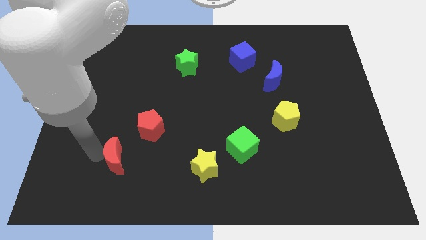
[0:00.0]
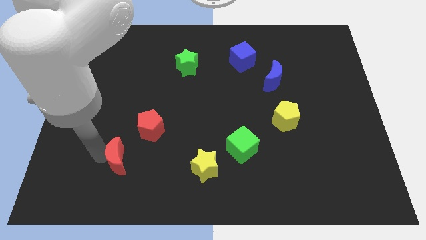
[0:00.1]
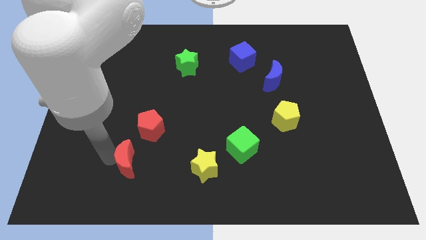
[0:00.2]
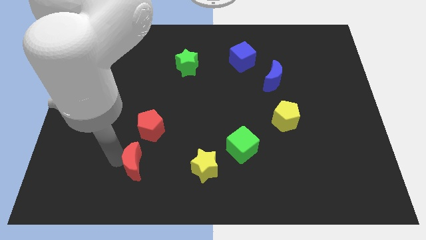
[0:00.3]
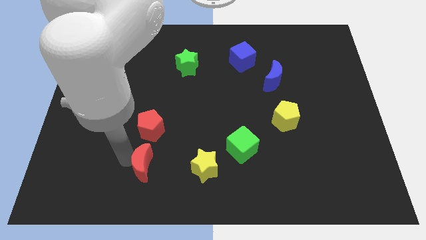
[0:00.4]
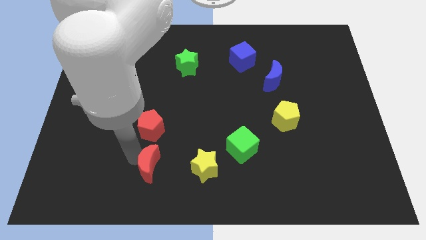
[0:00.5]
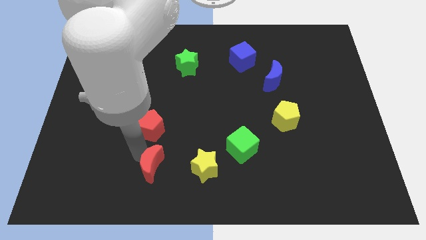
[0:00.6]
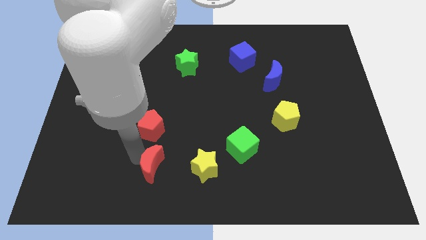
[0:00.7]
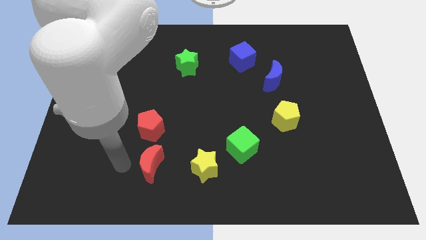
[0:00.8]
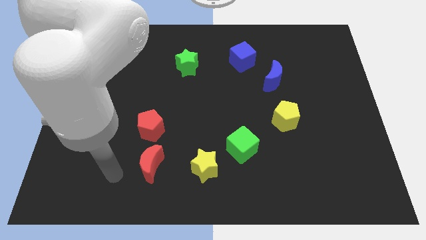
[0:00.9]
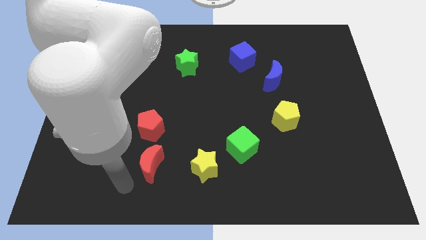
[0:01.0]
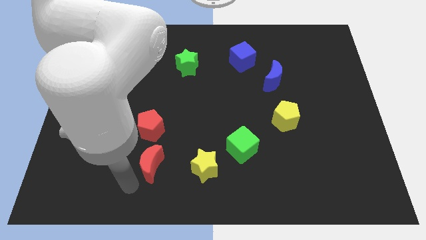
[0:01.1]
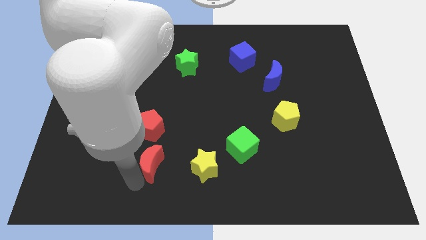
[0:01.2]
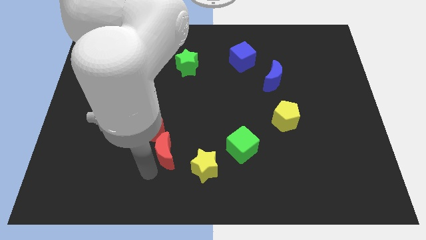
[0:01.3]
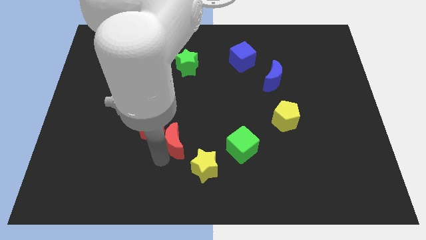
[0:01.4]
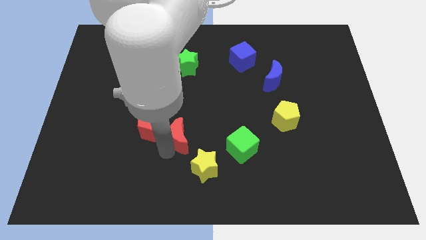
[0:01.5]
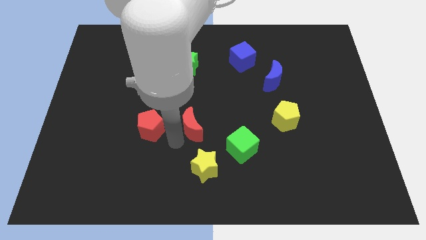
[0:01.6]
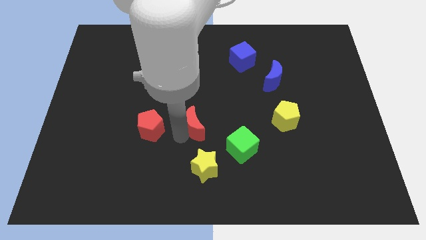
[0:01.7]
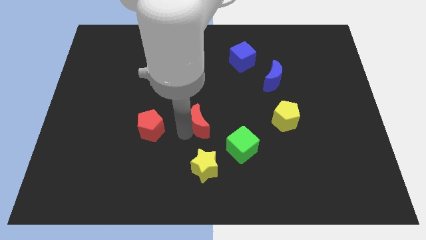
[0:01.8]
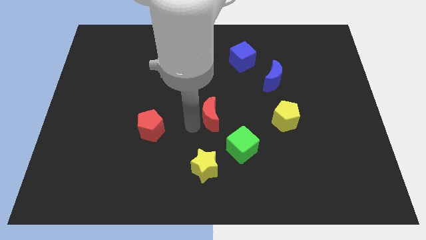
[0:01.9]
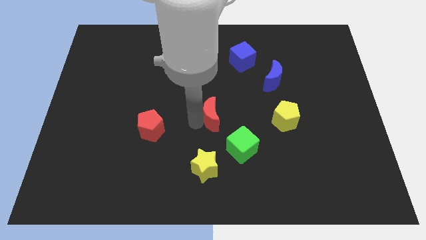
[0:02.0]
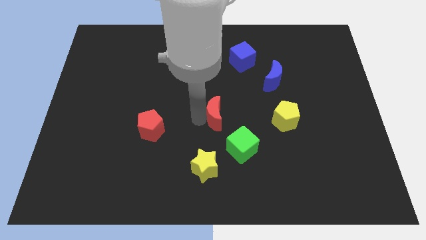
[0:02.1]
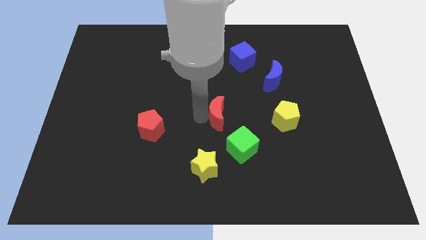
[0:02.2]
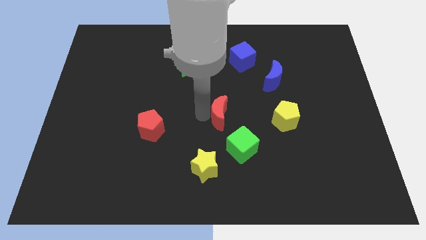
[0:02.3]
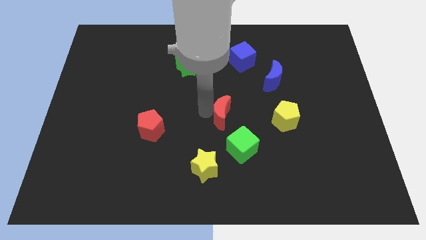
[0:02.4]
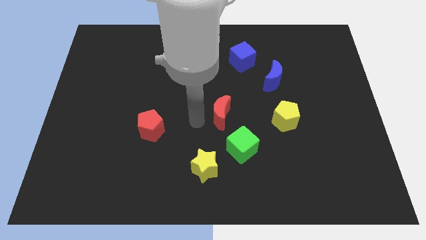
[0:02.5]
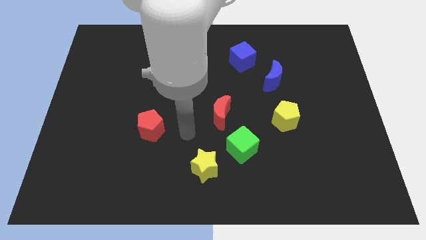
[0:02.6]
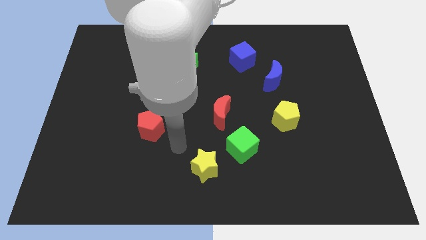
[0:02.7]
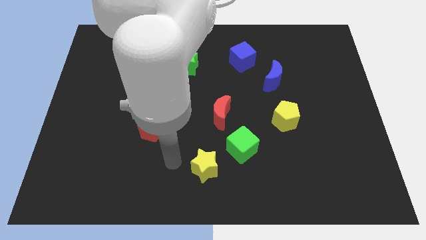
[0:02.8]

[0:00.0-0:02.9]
move the red moon at the center of the board

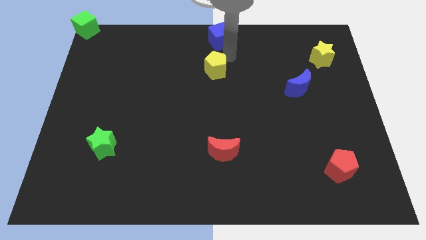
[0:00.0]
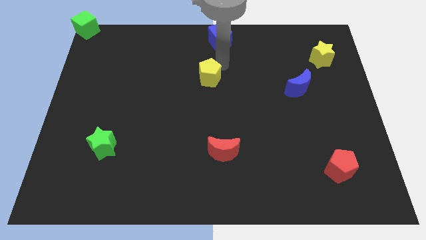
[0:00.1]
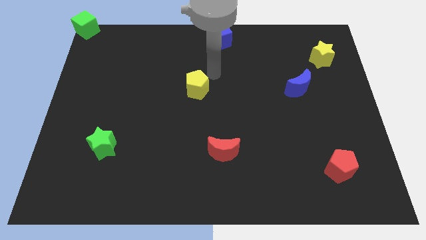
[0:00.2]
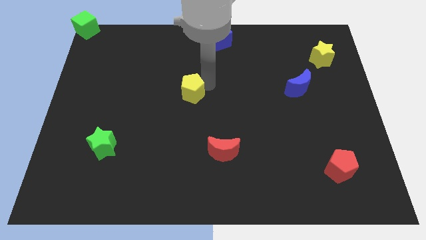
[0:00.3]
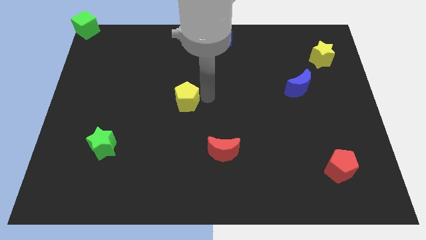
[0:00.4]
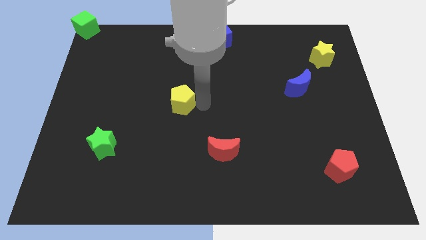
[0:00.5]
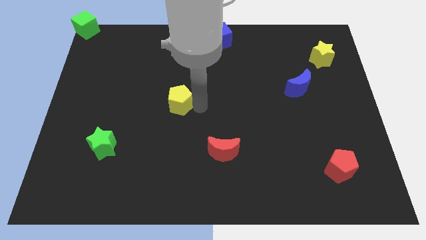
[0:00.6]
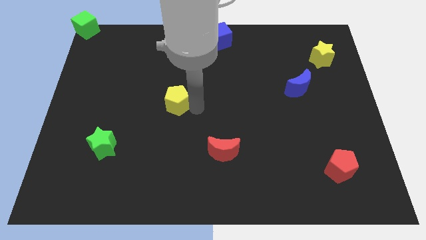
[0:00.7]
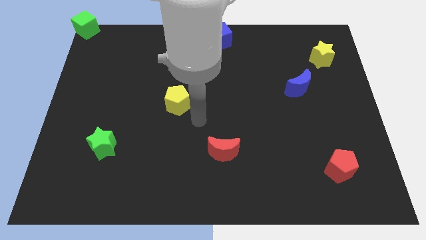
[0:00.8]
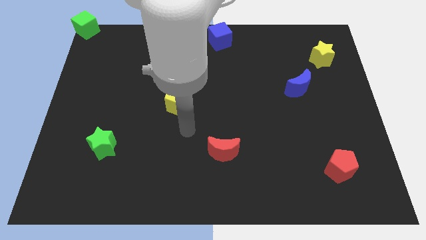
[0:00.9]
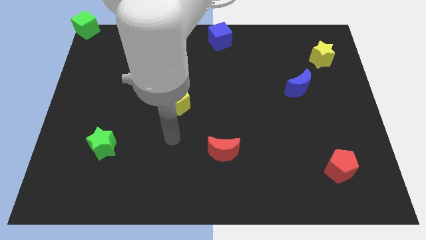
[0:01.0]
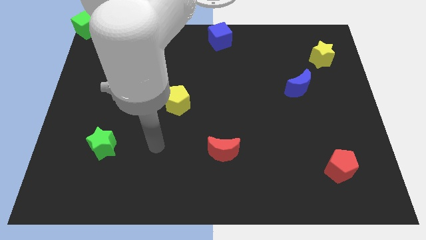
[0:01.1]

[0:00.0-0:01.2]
push yellow pentagon diagonally bottom left to the blue cube

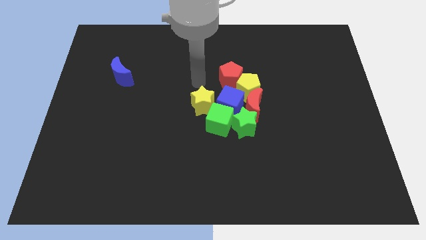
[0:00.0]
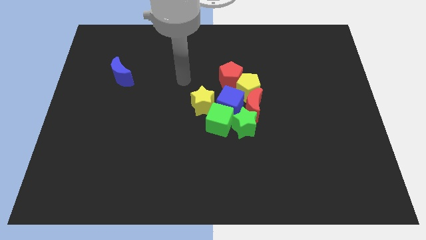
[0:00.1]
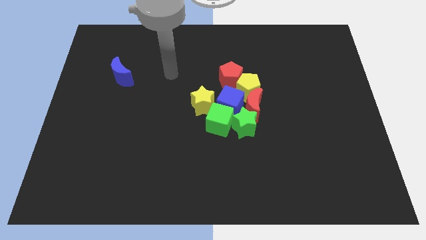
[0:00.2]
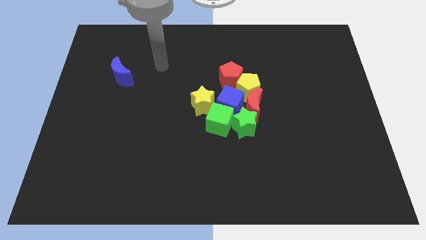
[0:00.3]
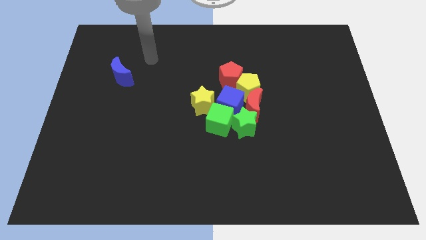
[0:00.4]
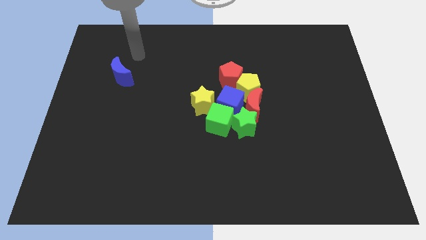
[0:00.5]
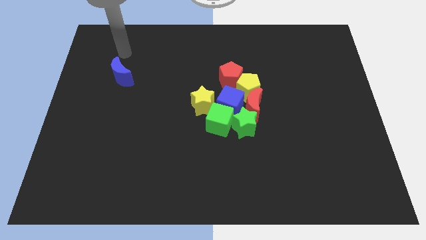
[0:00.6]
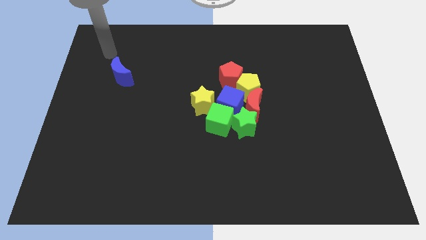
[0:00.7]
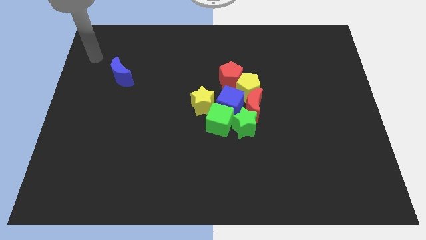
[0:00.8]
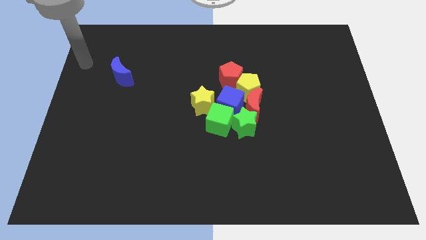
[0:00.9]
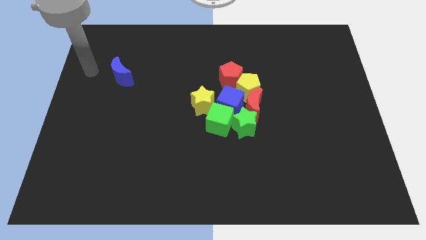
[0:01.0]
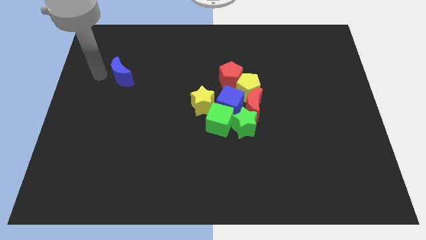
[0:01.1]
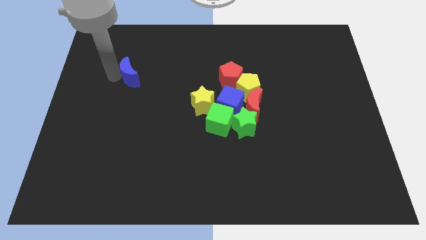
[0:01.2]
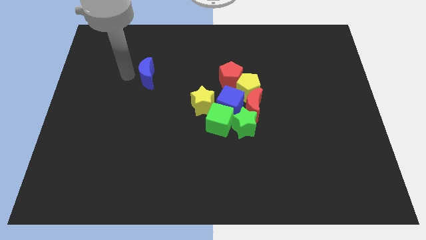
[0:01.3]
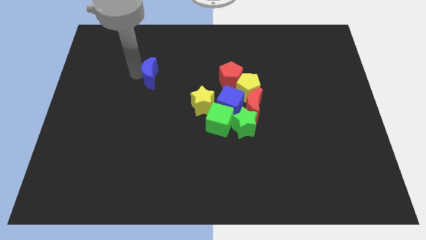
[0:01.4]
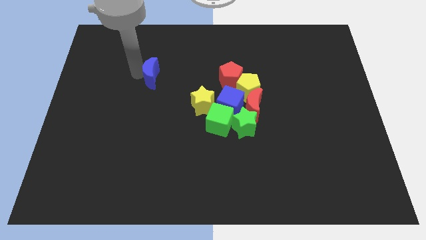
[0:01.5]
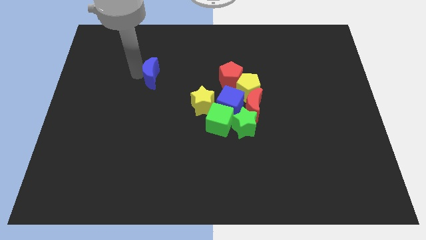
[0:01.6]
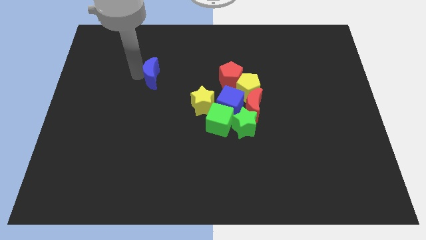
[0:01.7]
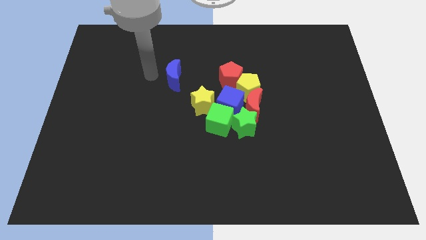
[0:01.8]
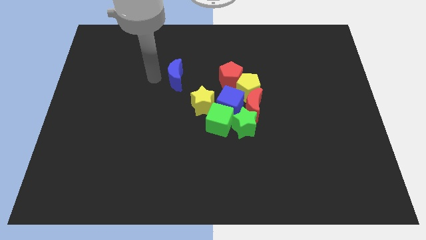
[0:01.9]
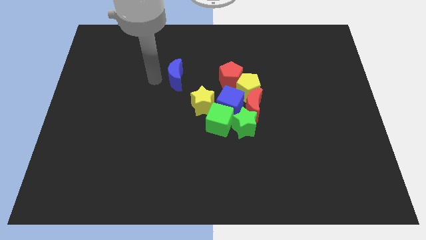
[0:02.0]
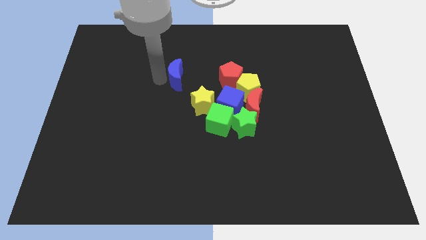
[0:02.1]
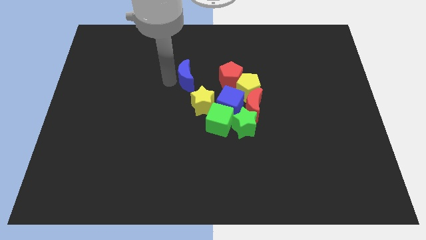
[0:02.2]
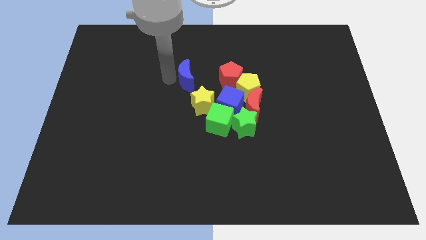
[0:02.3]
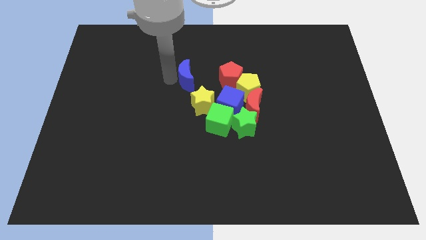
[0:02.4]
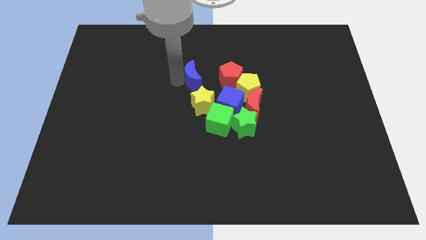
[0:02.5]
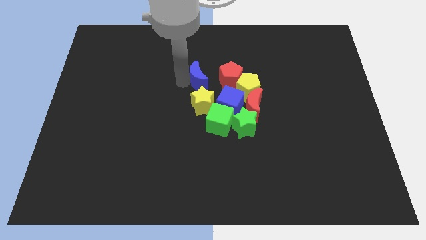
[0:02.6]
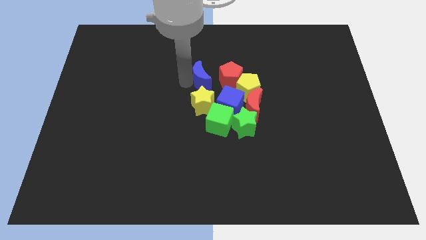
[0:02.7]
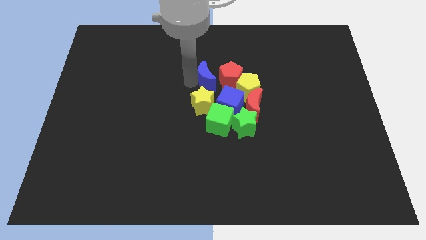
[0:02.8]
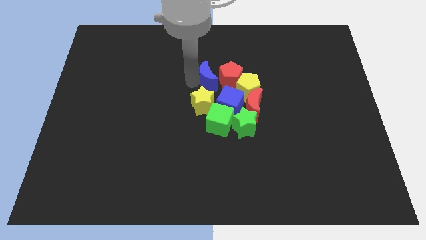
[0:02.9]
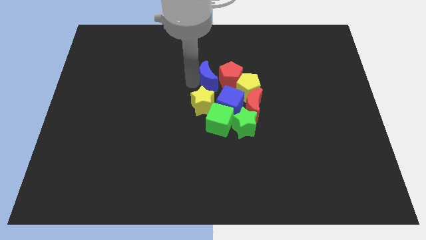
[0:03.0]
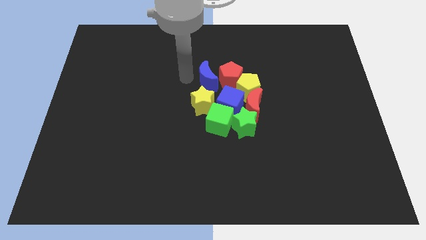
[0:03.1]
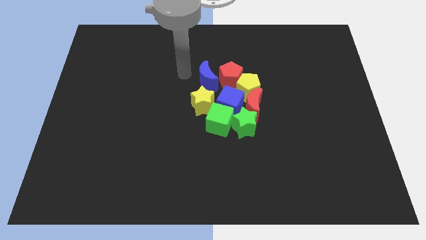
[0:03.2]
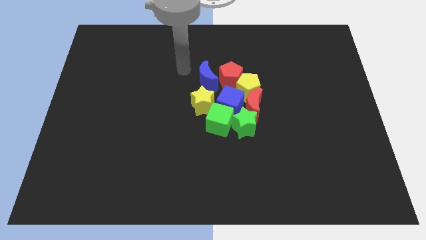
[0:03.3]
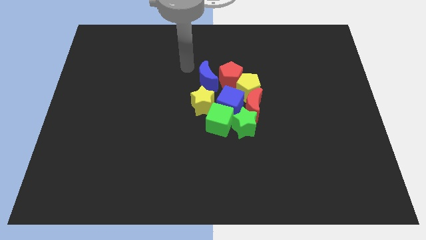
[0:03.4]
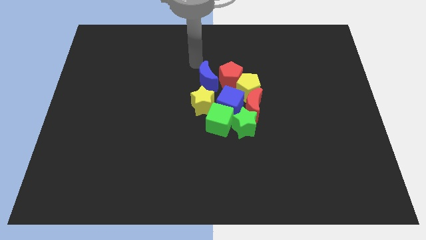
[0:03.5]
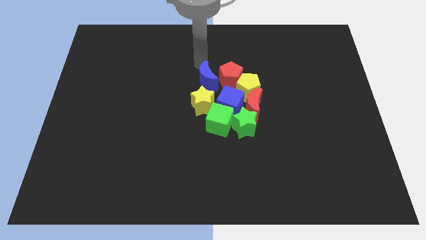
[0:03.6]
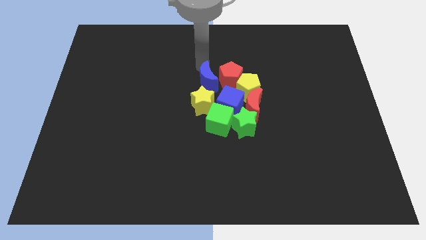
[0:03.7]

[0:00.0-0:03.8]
move the blue moon to the center

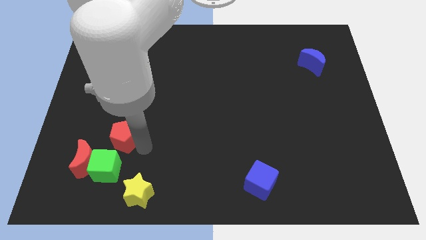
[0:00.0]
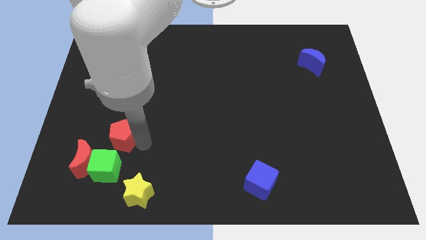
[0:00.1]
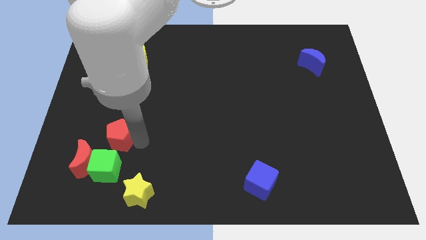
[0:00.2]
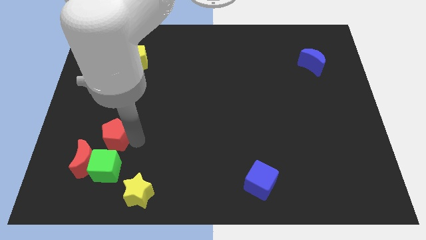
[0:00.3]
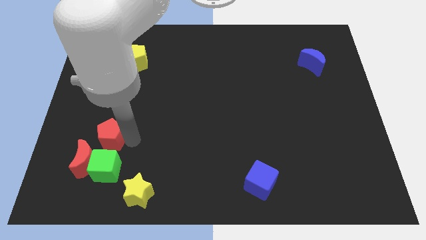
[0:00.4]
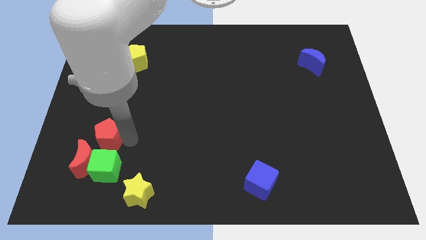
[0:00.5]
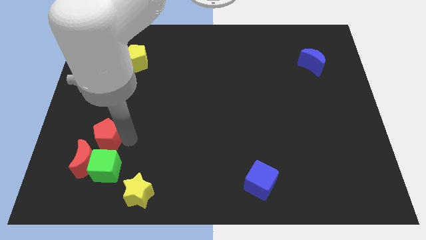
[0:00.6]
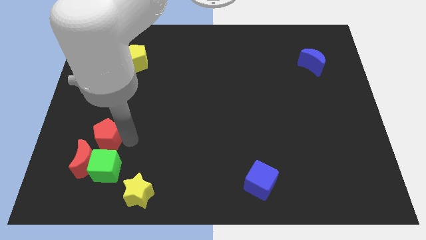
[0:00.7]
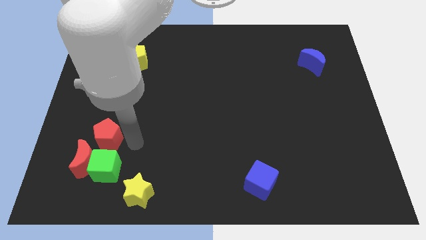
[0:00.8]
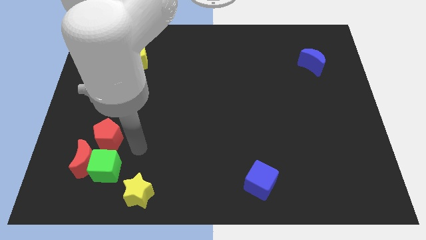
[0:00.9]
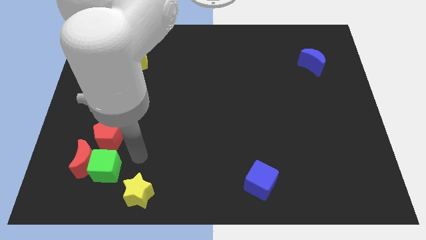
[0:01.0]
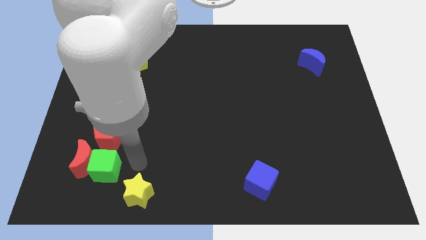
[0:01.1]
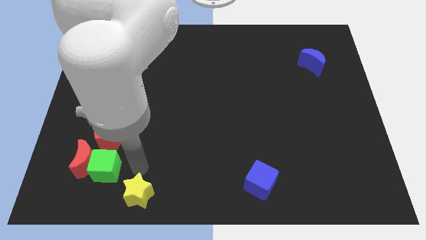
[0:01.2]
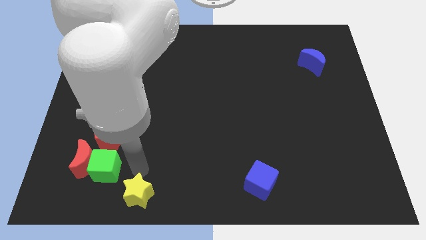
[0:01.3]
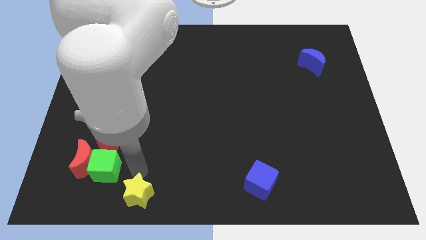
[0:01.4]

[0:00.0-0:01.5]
place the red pentagon above the green cube
